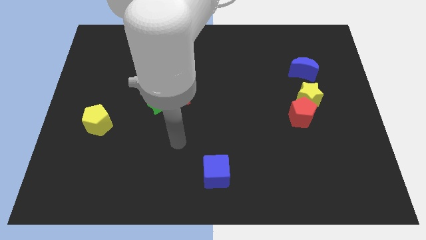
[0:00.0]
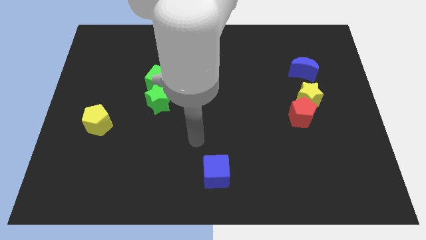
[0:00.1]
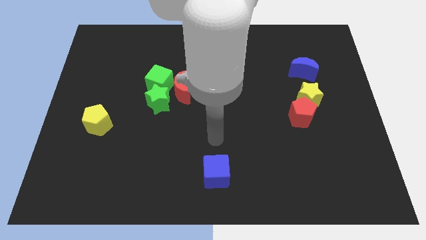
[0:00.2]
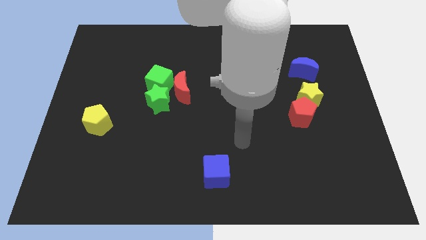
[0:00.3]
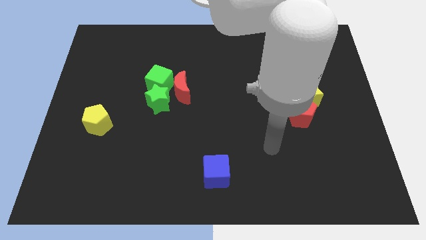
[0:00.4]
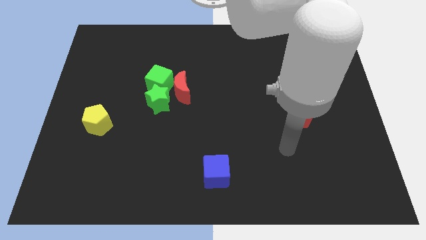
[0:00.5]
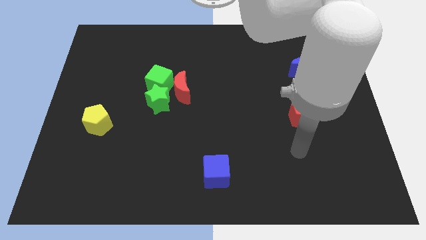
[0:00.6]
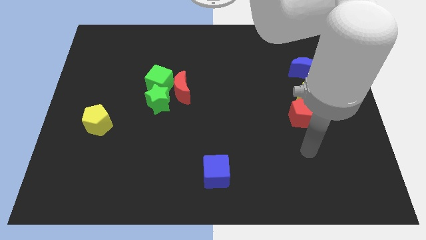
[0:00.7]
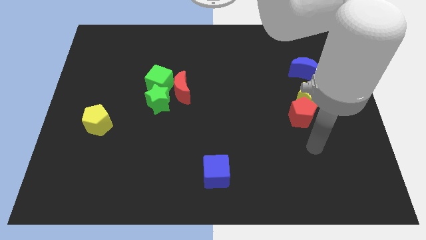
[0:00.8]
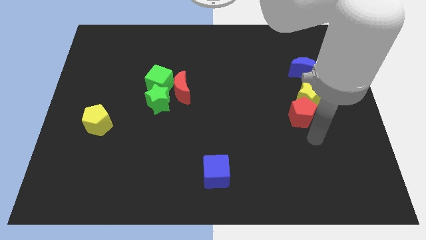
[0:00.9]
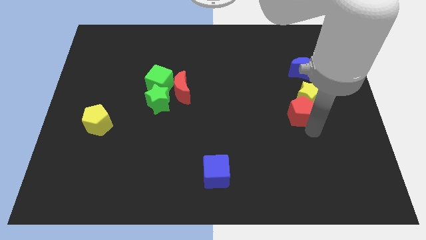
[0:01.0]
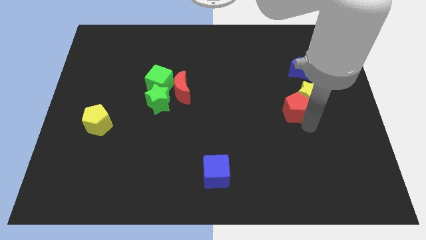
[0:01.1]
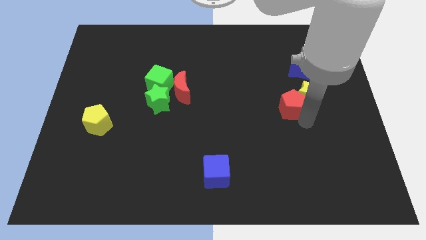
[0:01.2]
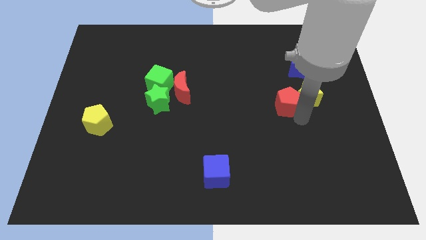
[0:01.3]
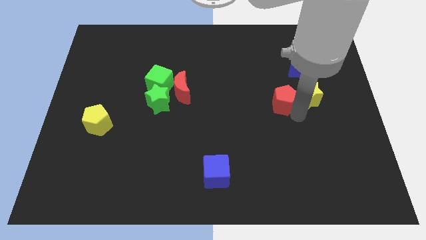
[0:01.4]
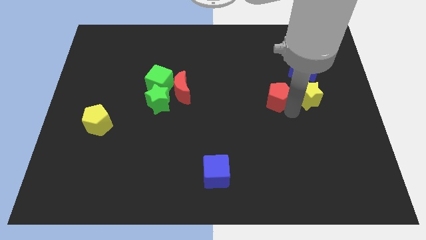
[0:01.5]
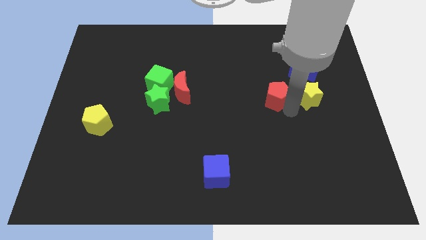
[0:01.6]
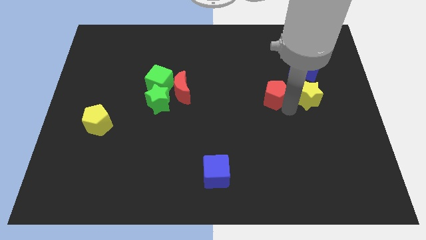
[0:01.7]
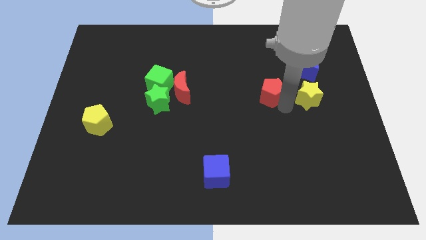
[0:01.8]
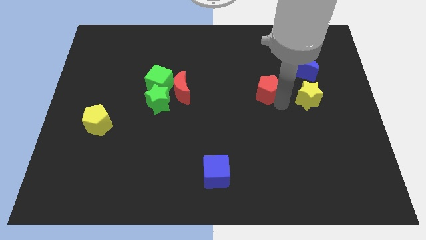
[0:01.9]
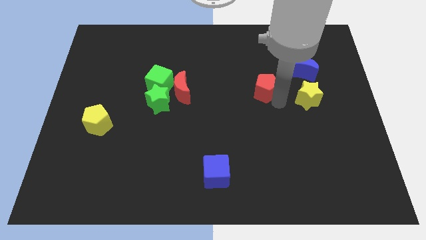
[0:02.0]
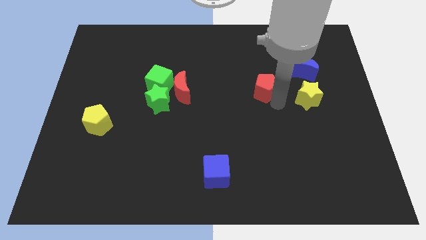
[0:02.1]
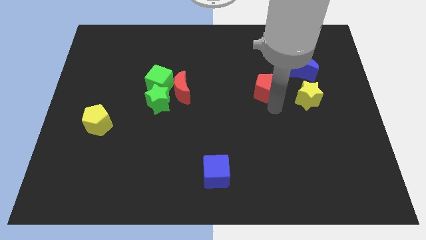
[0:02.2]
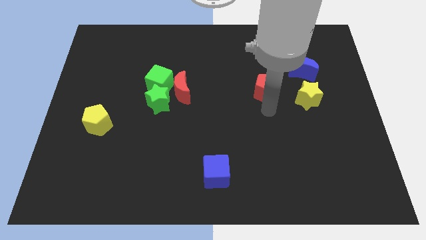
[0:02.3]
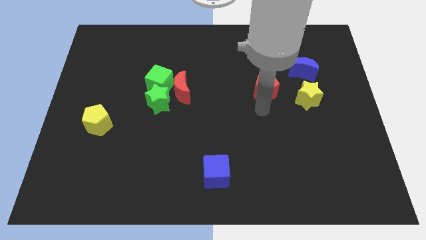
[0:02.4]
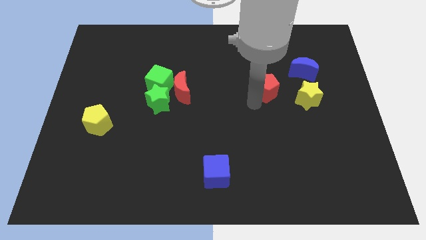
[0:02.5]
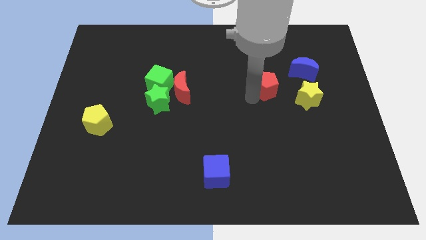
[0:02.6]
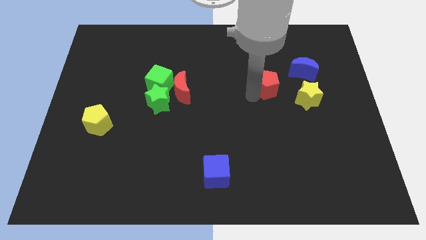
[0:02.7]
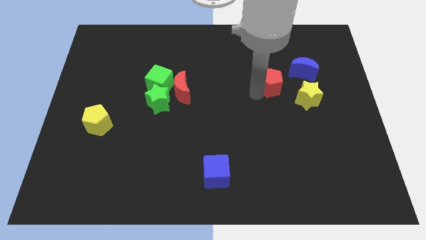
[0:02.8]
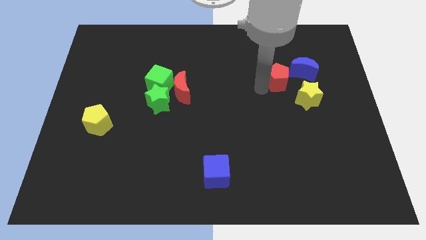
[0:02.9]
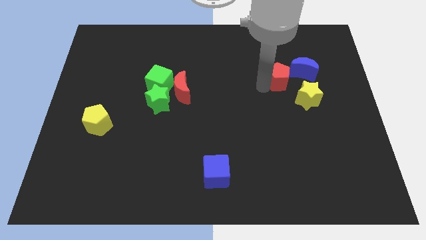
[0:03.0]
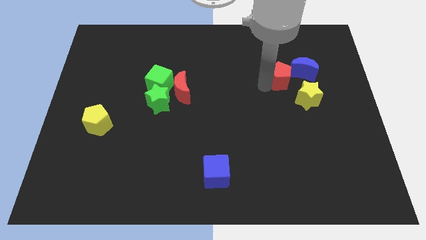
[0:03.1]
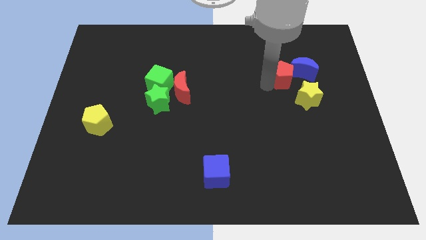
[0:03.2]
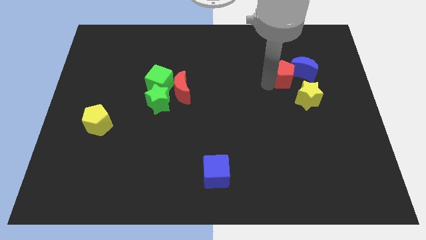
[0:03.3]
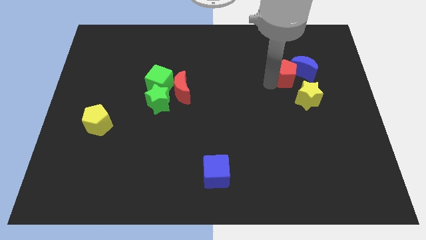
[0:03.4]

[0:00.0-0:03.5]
slide the red pentagon next to the blue moon

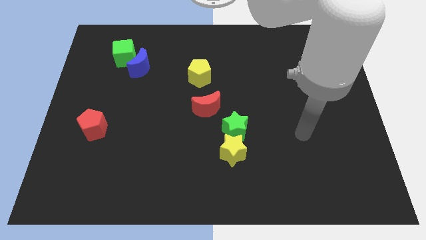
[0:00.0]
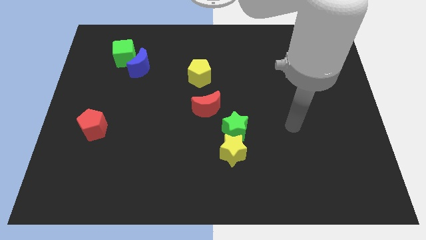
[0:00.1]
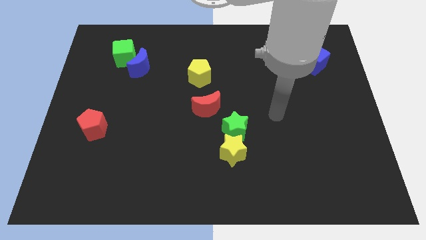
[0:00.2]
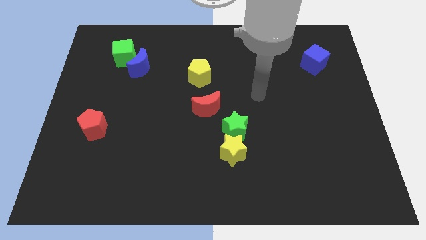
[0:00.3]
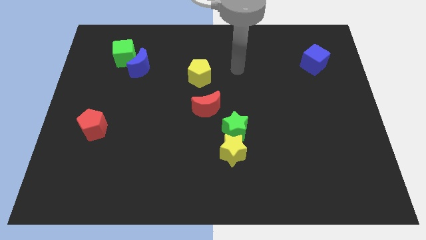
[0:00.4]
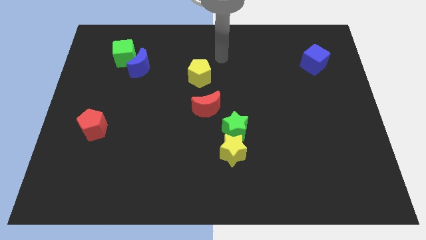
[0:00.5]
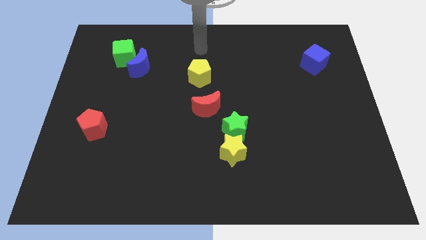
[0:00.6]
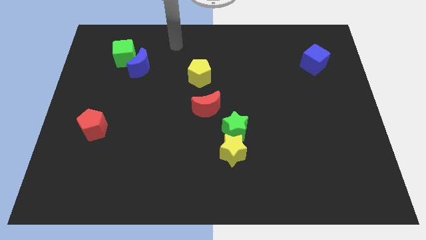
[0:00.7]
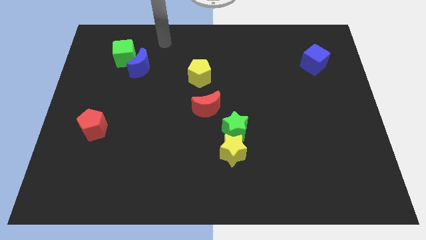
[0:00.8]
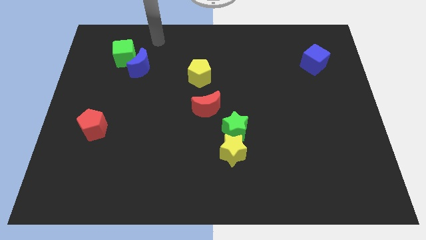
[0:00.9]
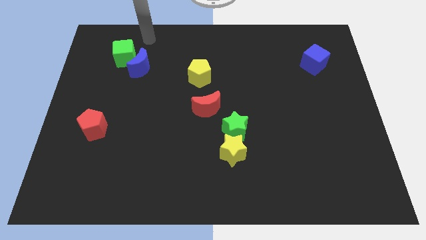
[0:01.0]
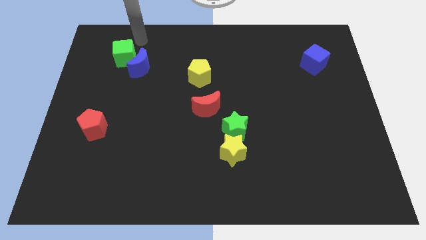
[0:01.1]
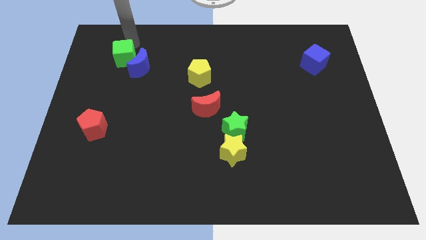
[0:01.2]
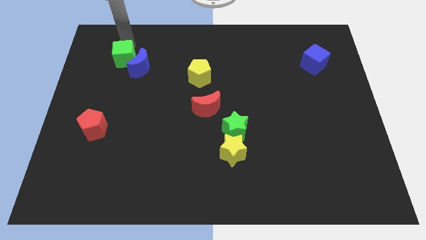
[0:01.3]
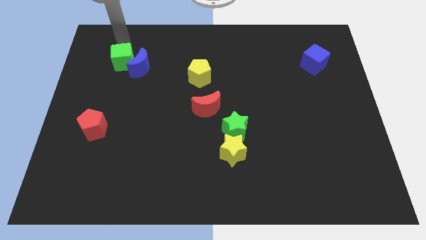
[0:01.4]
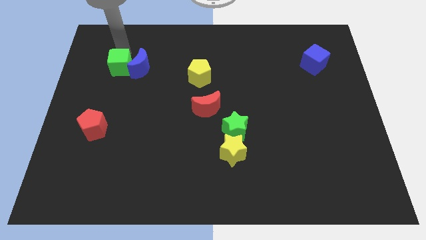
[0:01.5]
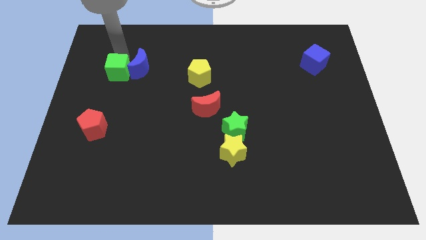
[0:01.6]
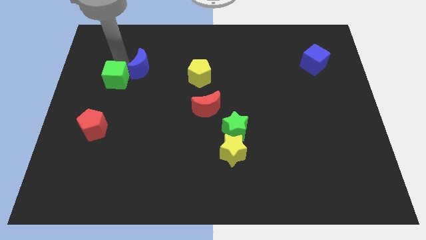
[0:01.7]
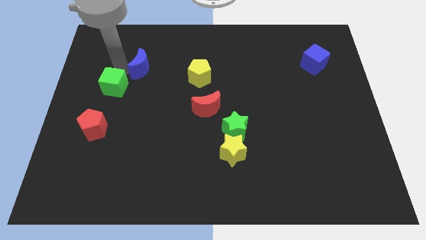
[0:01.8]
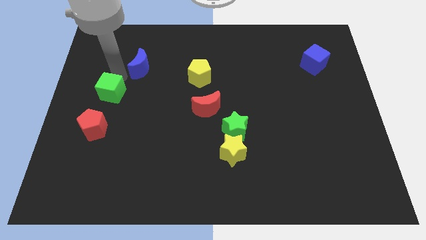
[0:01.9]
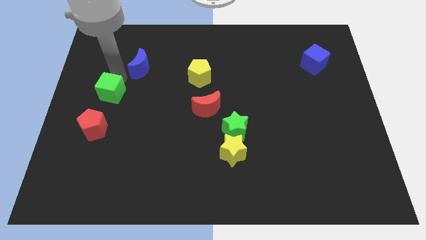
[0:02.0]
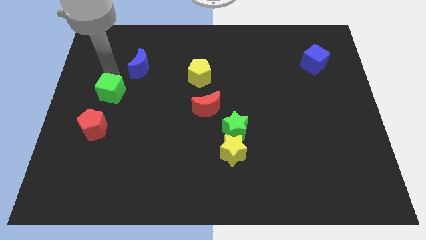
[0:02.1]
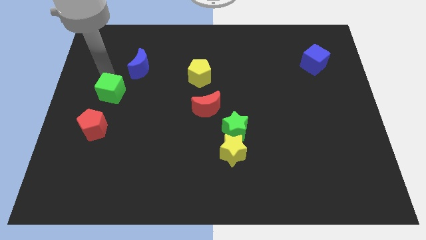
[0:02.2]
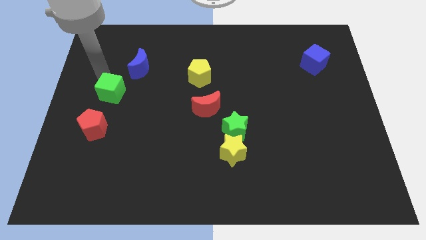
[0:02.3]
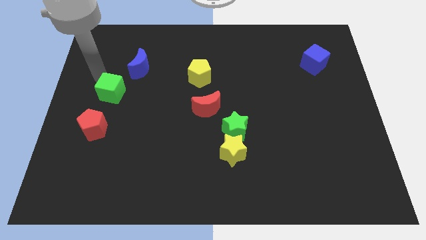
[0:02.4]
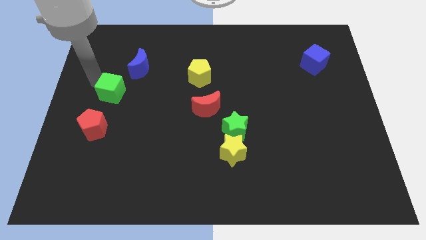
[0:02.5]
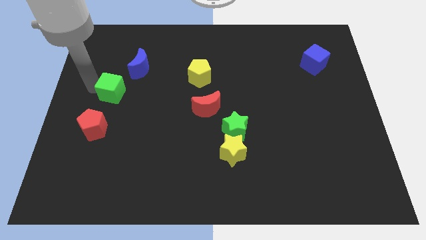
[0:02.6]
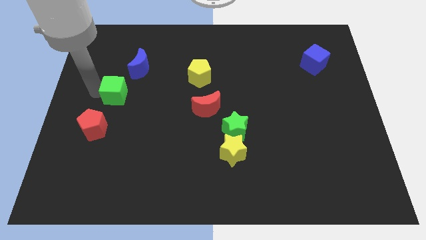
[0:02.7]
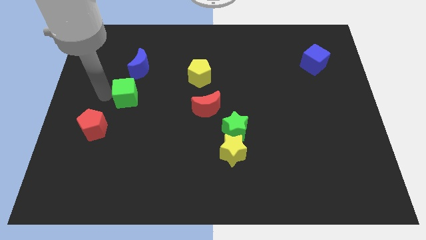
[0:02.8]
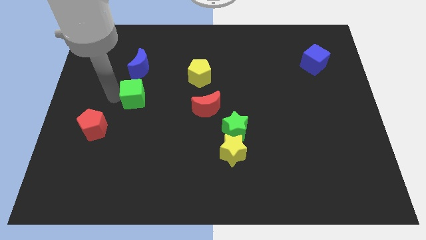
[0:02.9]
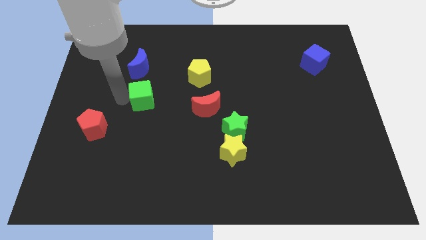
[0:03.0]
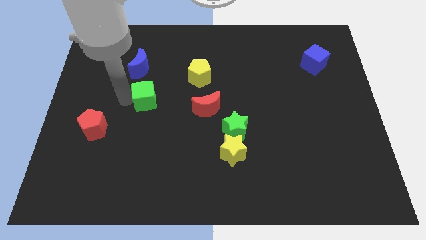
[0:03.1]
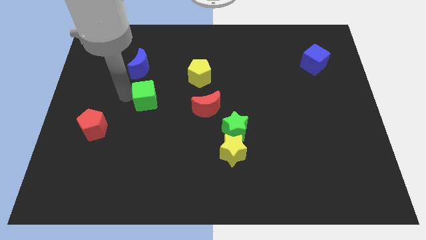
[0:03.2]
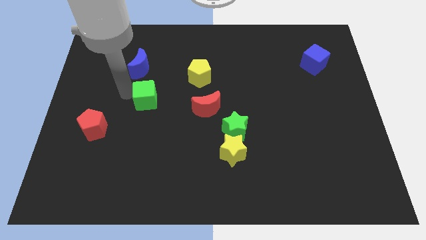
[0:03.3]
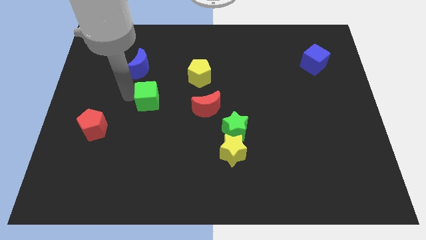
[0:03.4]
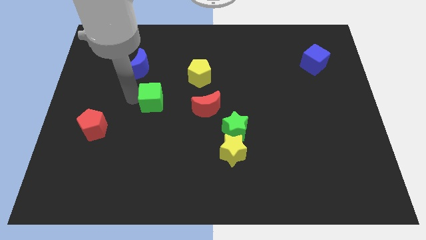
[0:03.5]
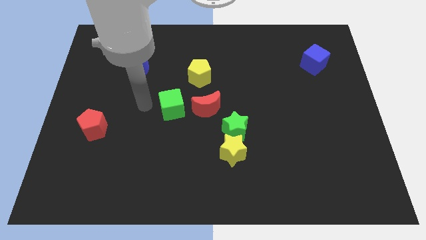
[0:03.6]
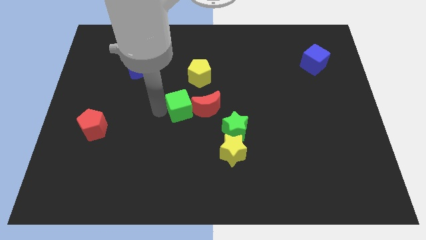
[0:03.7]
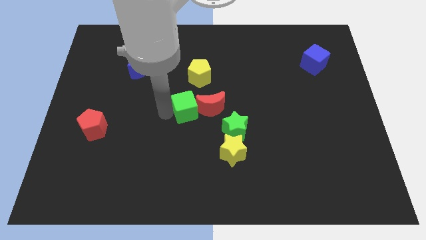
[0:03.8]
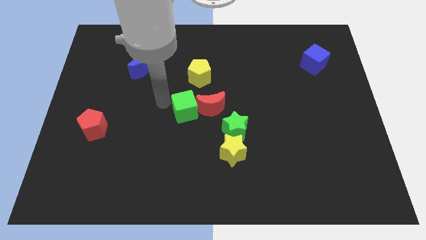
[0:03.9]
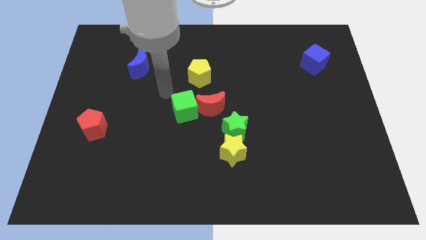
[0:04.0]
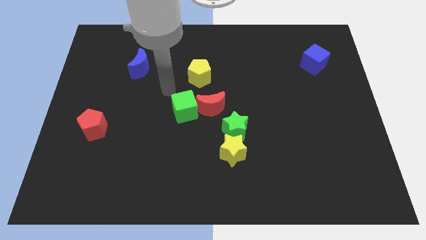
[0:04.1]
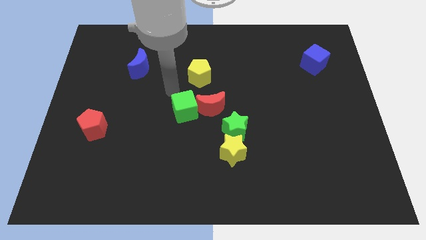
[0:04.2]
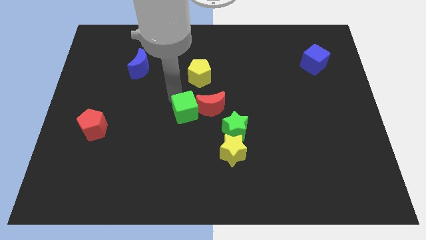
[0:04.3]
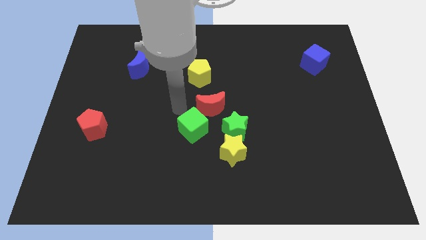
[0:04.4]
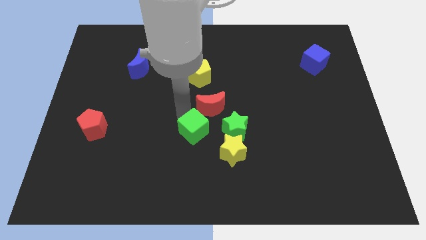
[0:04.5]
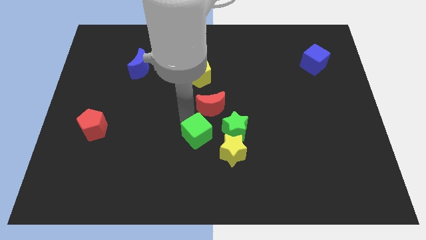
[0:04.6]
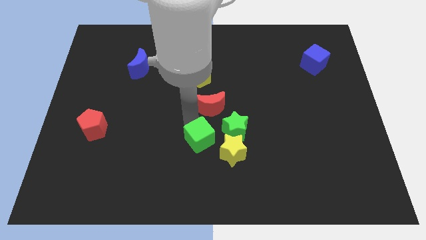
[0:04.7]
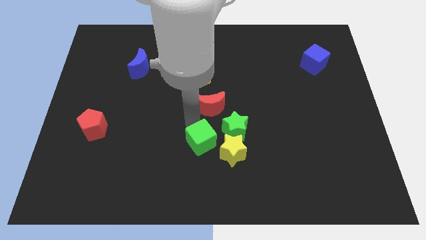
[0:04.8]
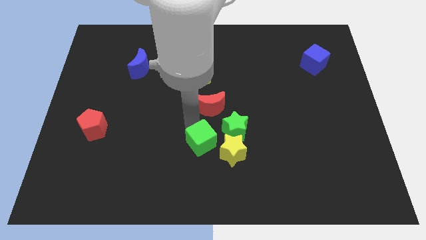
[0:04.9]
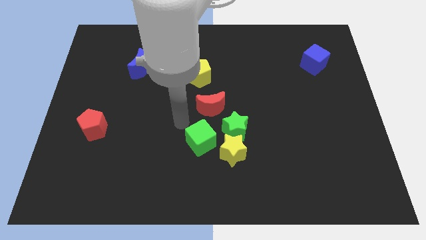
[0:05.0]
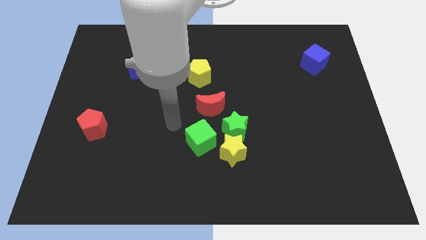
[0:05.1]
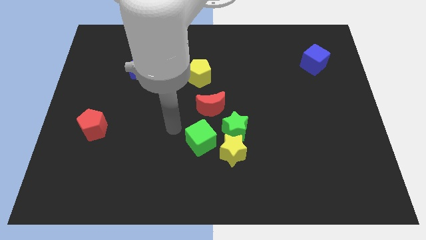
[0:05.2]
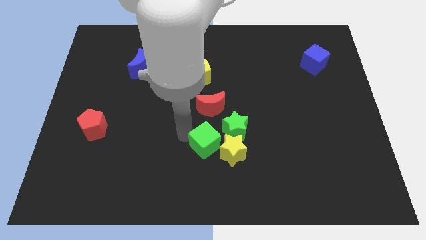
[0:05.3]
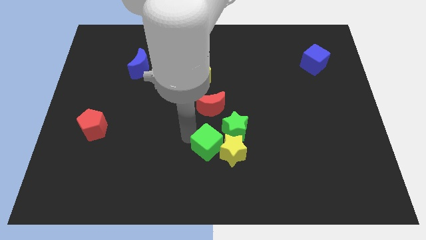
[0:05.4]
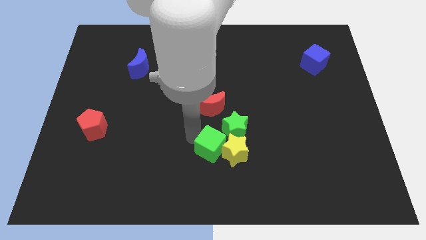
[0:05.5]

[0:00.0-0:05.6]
slide the green cube next to the yellow star
